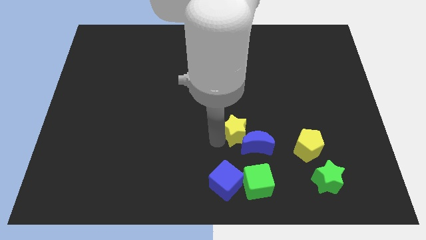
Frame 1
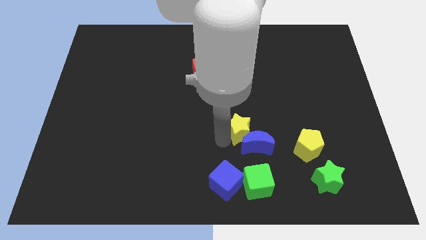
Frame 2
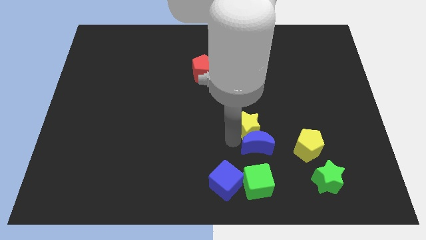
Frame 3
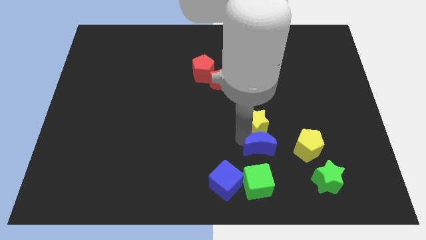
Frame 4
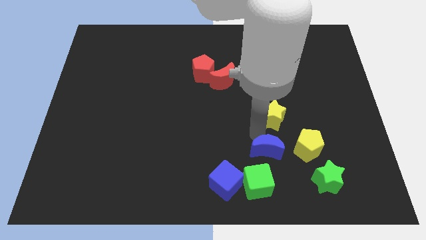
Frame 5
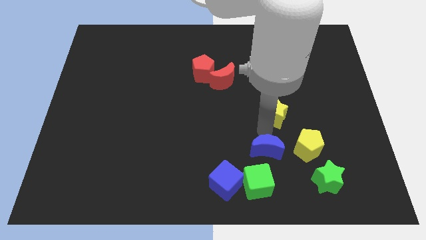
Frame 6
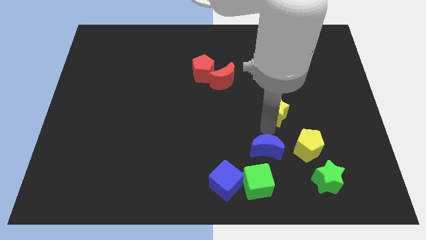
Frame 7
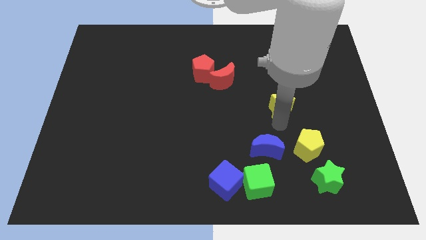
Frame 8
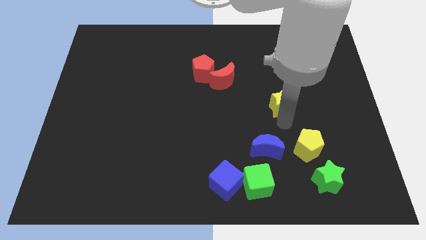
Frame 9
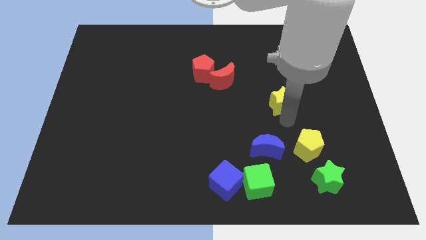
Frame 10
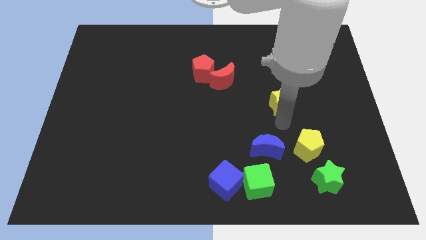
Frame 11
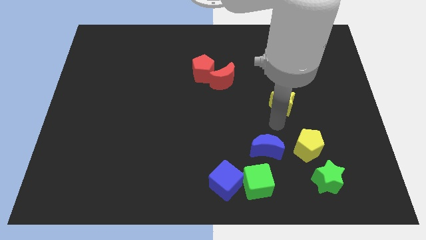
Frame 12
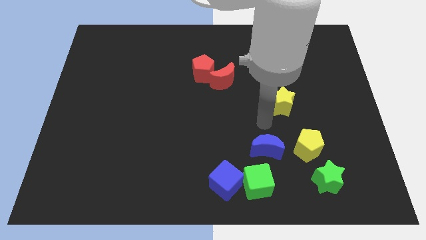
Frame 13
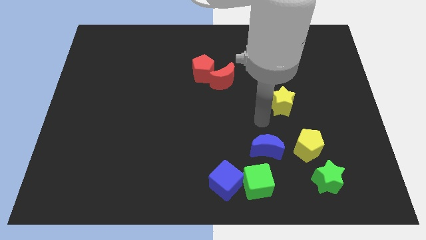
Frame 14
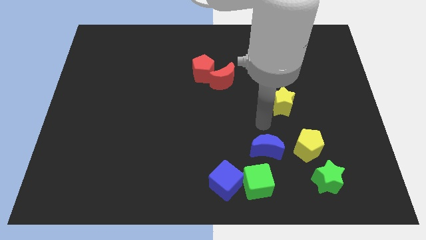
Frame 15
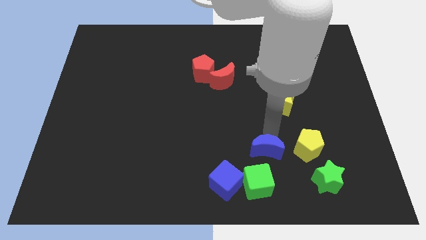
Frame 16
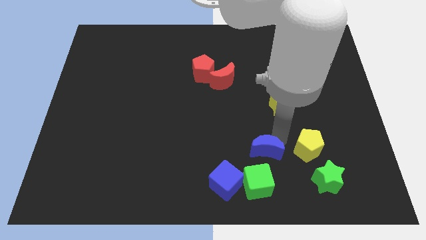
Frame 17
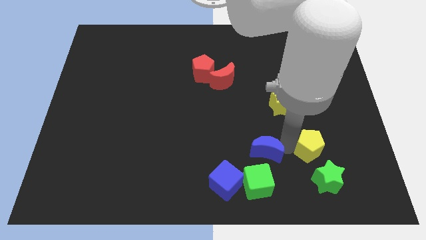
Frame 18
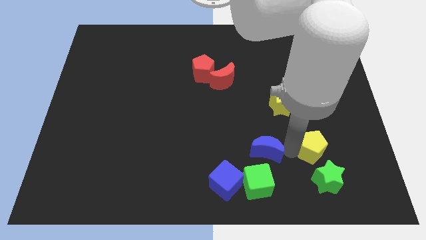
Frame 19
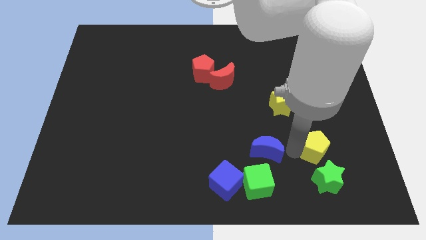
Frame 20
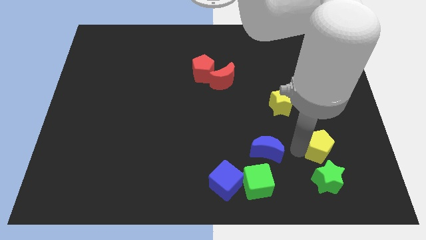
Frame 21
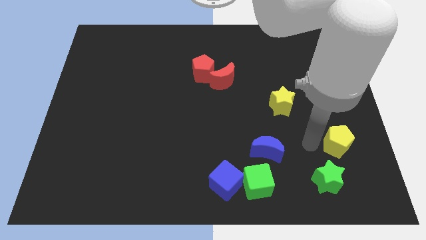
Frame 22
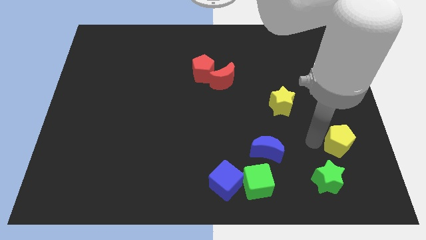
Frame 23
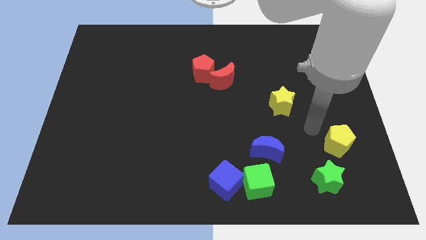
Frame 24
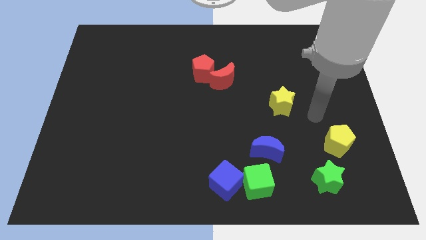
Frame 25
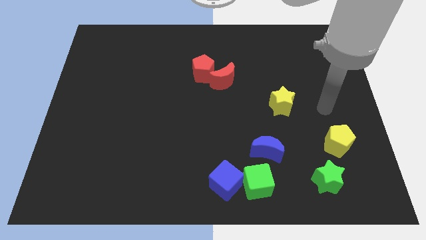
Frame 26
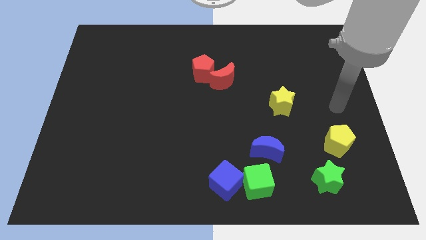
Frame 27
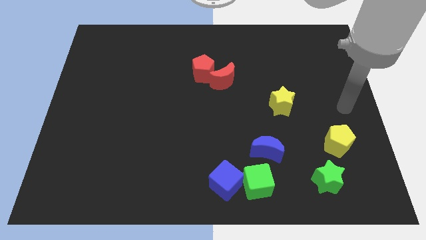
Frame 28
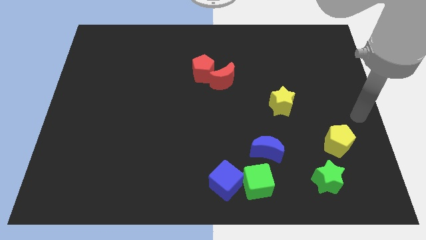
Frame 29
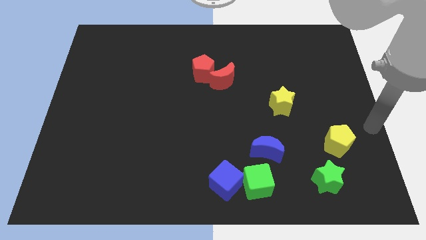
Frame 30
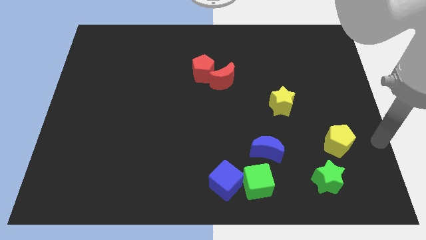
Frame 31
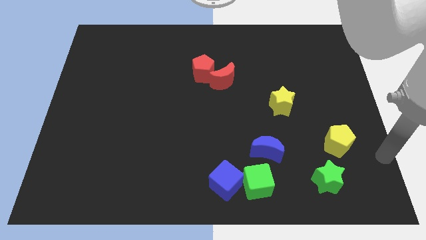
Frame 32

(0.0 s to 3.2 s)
push the yellow star diagonally at the bottom right of the red crescent along with the yellow pentagon

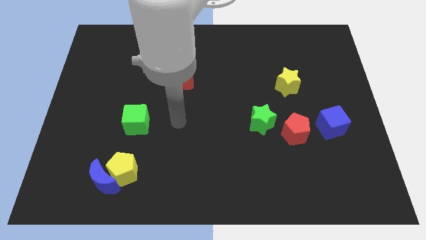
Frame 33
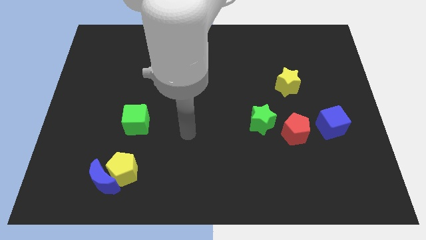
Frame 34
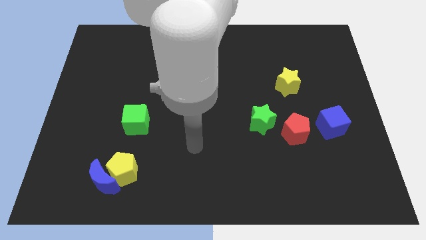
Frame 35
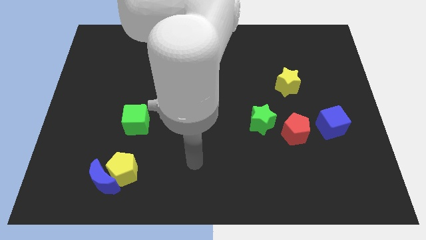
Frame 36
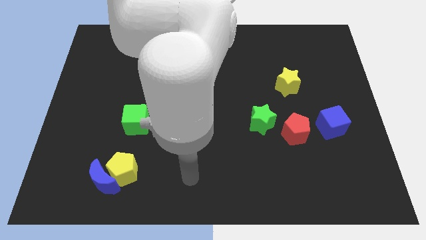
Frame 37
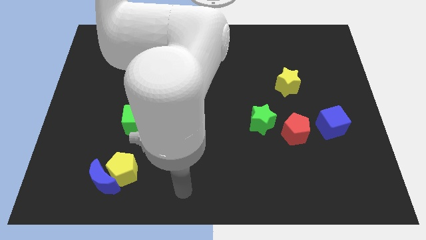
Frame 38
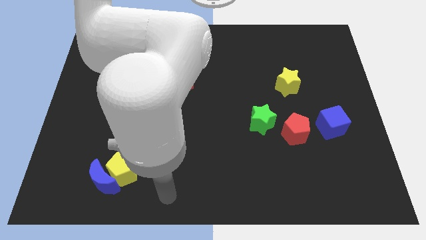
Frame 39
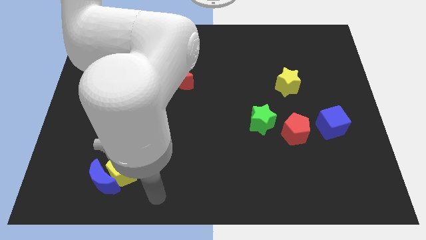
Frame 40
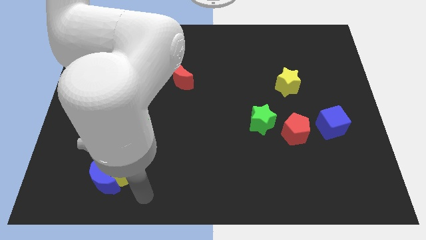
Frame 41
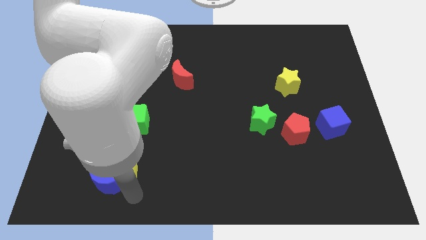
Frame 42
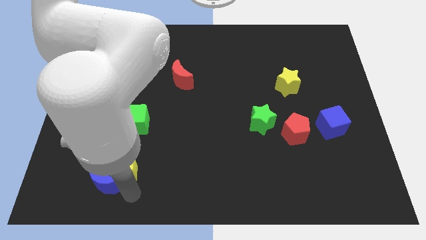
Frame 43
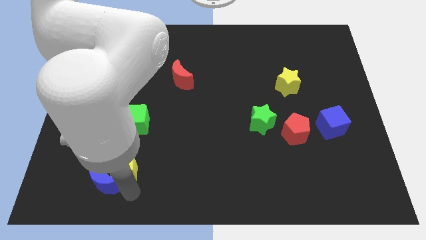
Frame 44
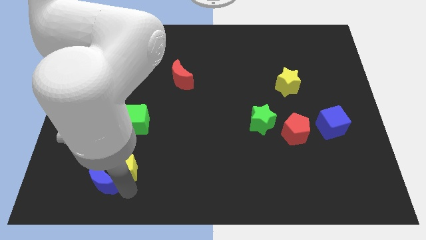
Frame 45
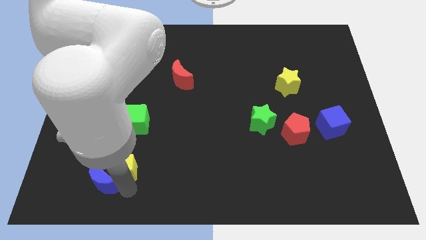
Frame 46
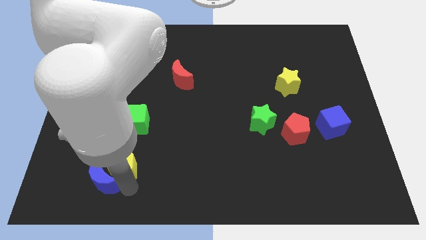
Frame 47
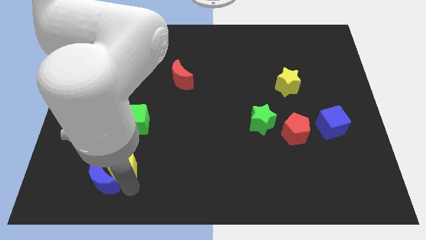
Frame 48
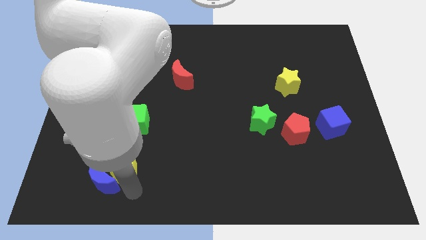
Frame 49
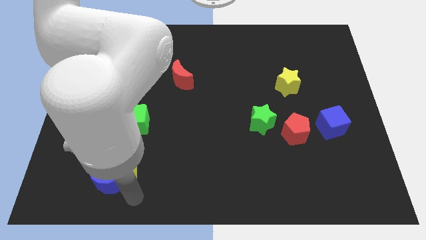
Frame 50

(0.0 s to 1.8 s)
move the yellow pentagon slightly

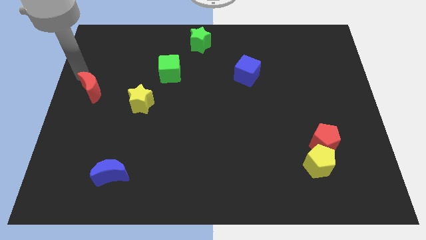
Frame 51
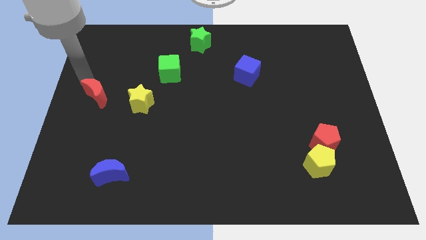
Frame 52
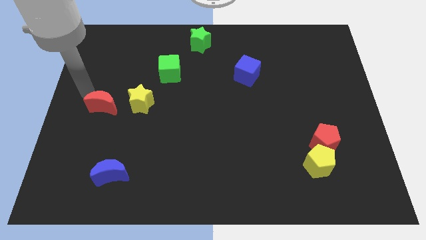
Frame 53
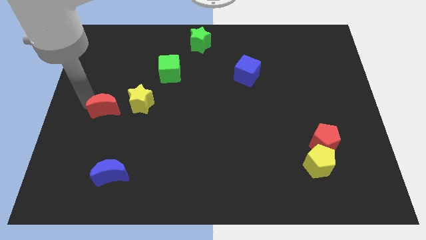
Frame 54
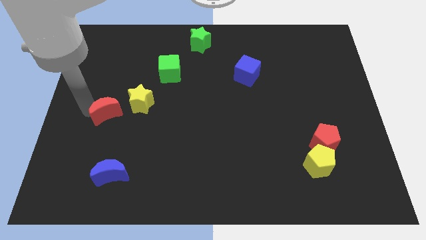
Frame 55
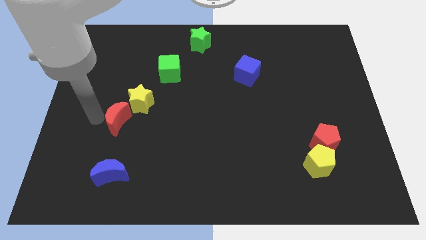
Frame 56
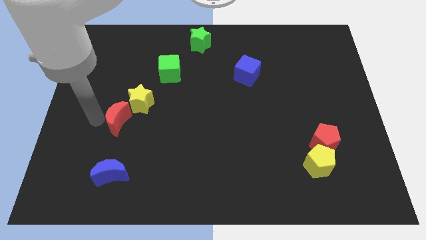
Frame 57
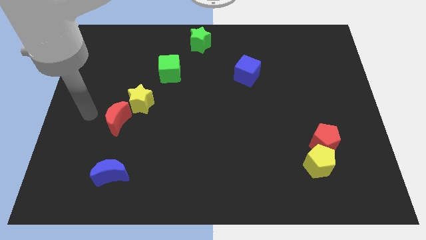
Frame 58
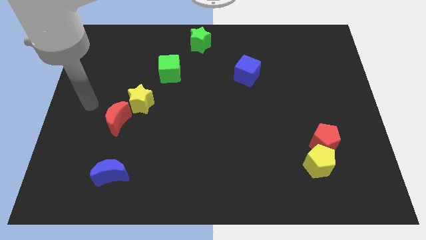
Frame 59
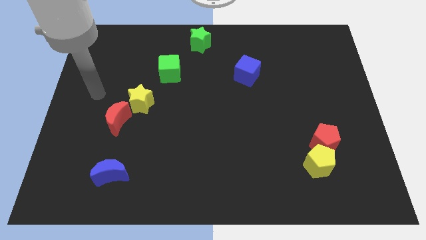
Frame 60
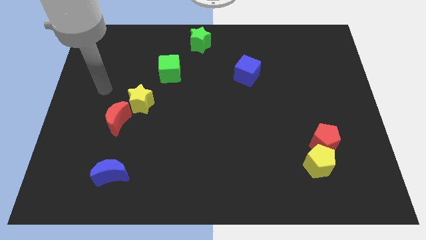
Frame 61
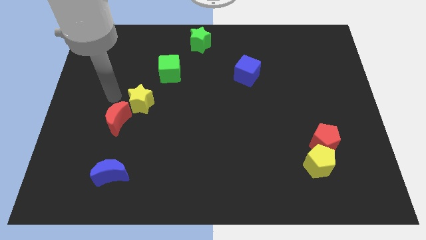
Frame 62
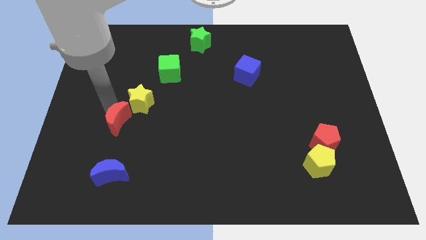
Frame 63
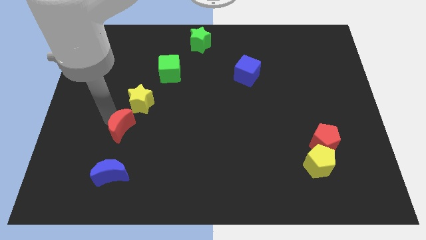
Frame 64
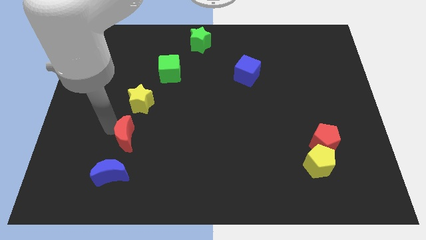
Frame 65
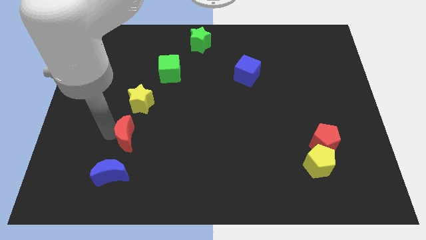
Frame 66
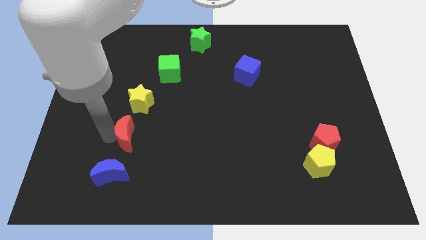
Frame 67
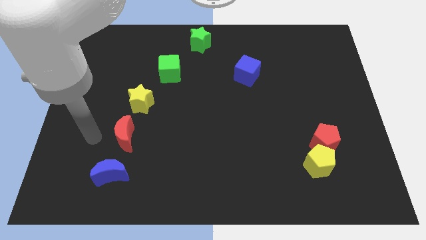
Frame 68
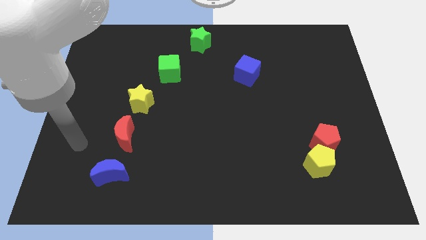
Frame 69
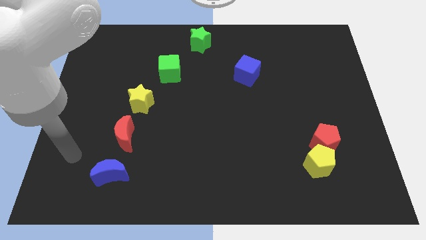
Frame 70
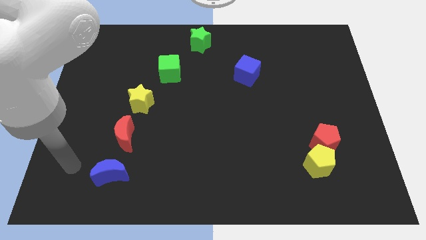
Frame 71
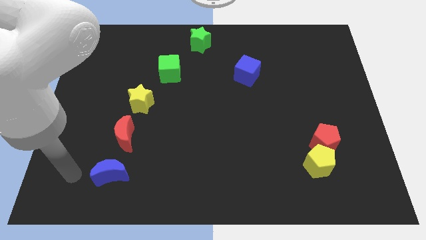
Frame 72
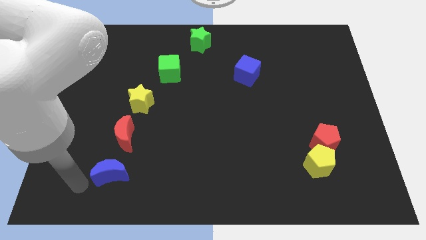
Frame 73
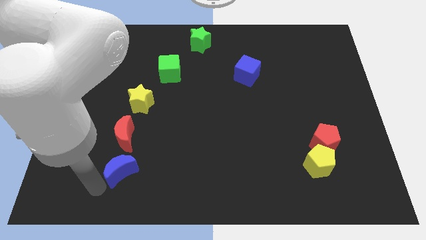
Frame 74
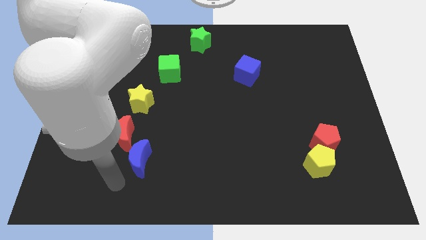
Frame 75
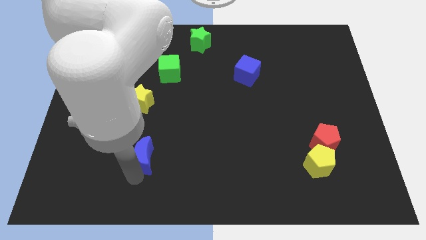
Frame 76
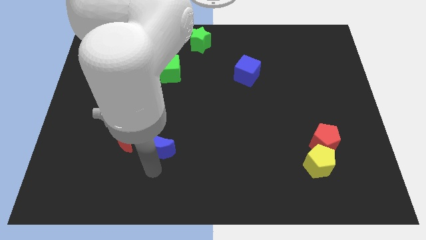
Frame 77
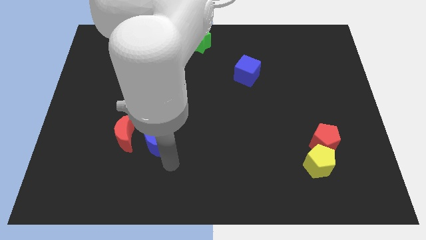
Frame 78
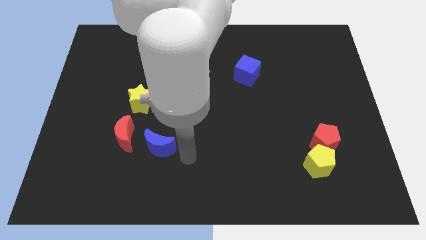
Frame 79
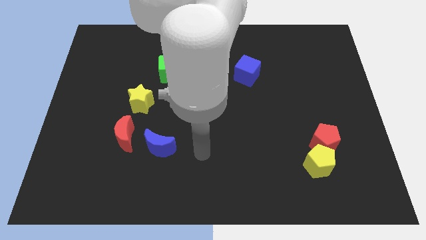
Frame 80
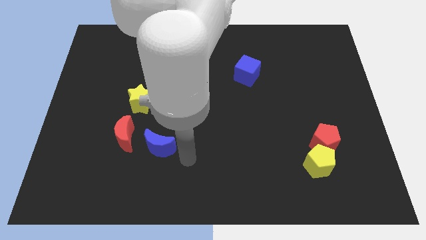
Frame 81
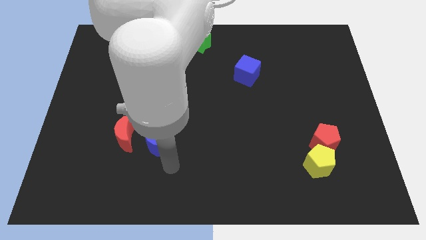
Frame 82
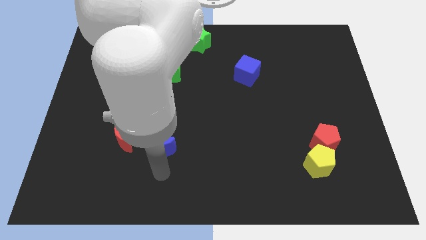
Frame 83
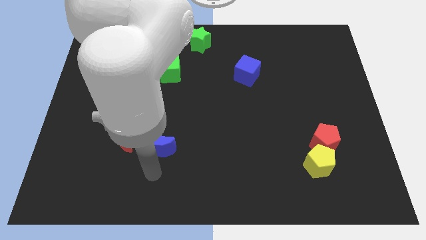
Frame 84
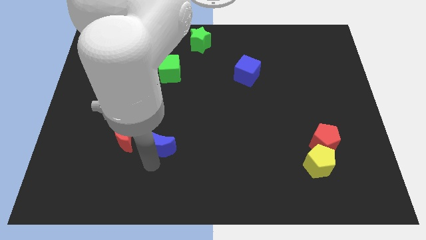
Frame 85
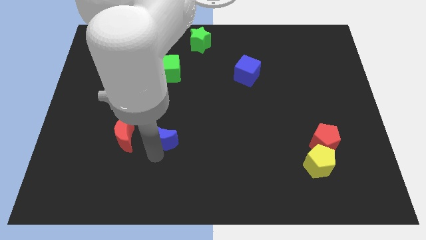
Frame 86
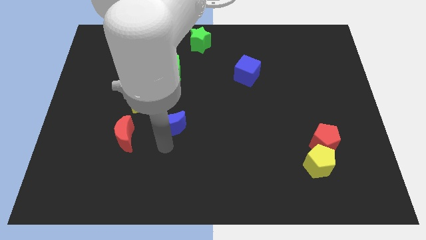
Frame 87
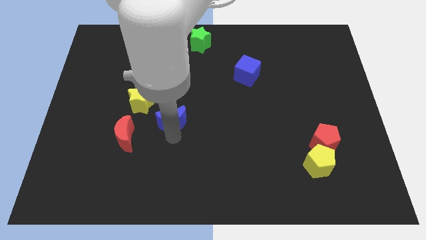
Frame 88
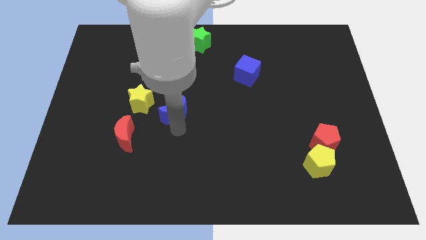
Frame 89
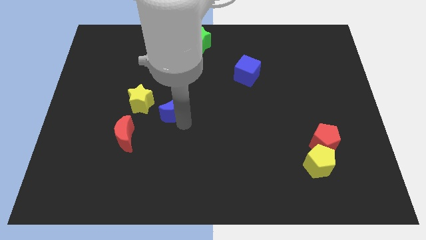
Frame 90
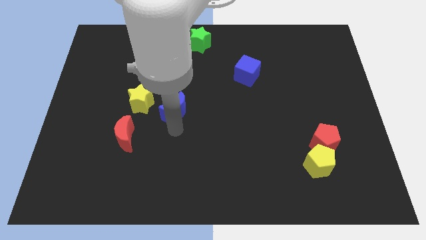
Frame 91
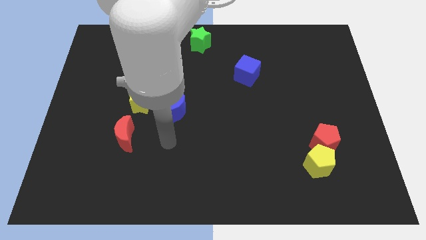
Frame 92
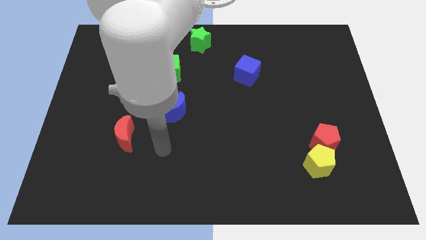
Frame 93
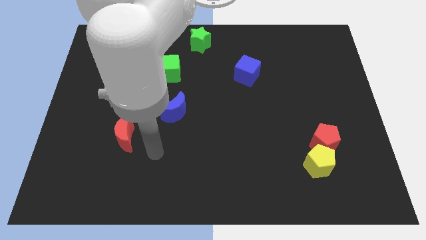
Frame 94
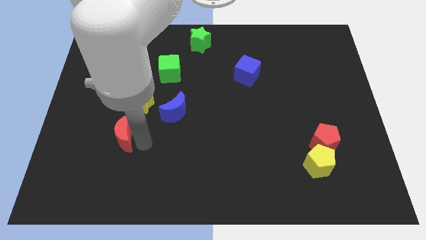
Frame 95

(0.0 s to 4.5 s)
move the blue crescent right to the yellow star
